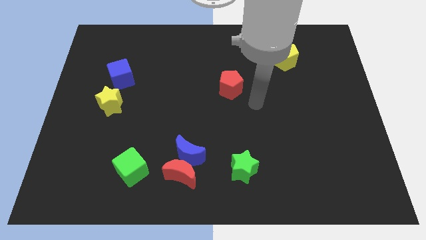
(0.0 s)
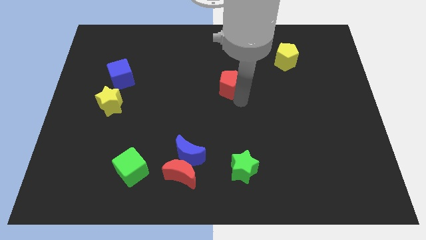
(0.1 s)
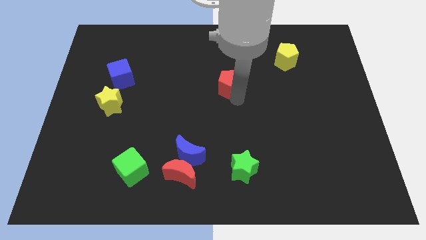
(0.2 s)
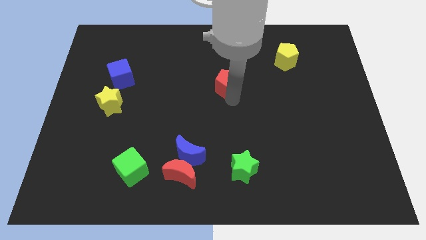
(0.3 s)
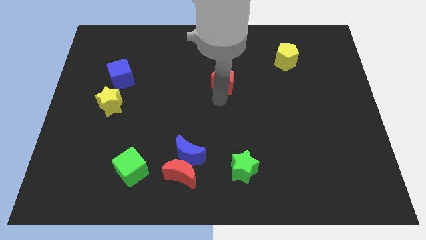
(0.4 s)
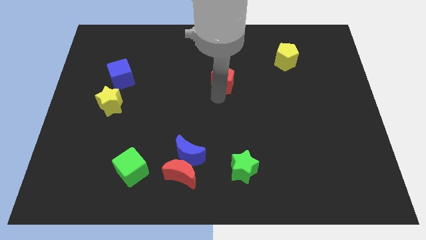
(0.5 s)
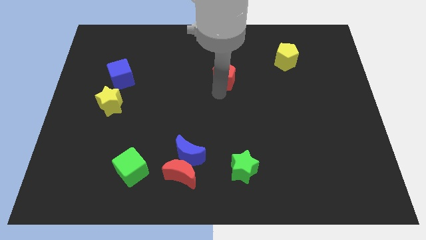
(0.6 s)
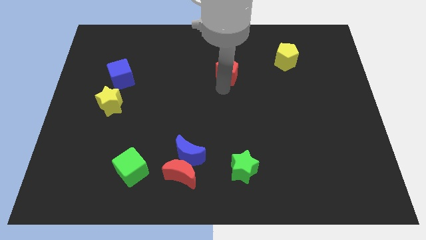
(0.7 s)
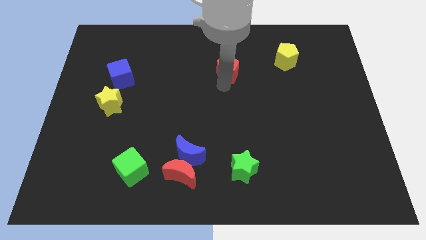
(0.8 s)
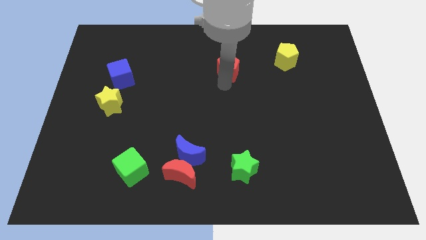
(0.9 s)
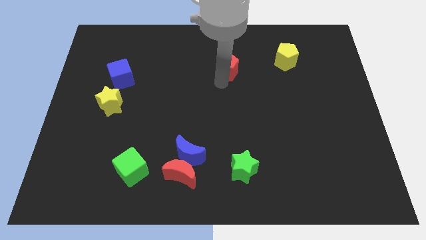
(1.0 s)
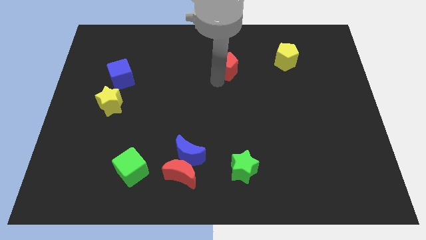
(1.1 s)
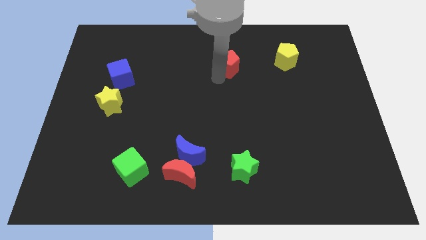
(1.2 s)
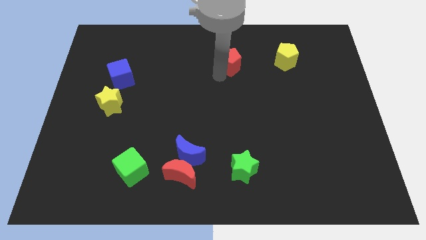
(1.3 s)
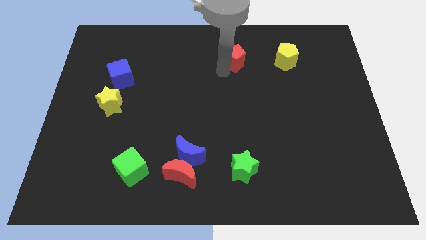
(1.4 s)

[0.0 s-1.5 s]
push red pentagon parallel left to yellow pentagon

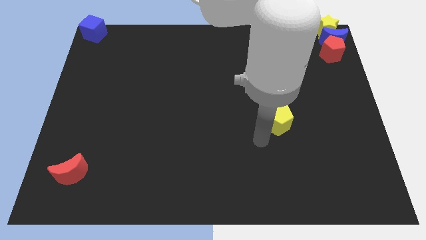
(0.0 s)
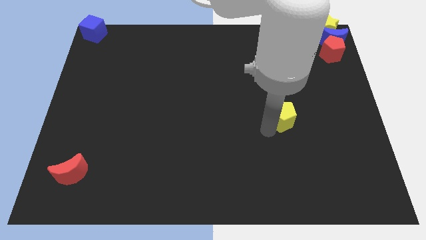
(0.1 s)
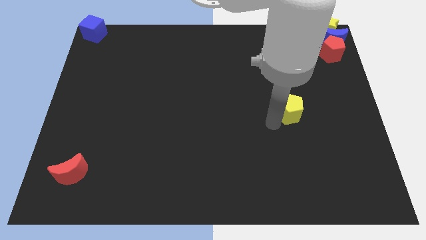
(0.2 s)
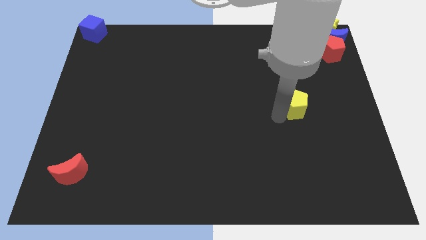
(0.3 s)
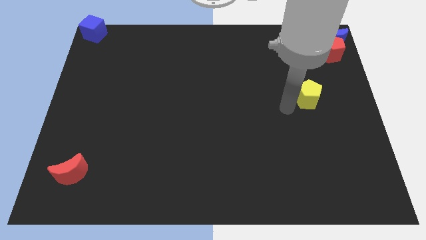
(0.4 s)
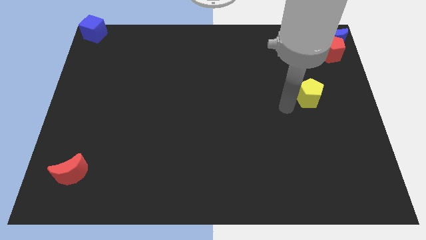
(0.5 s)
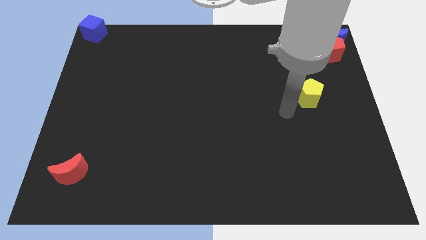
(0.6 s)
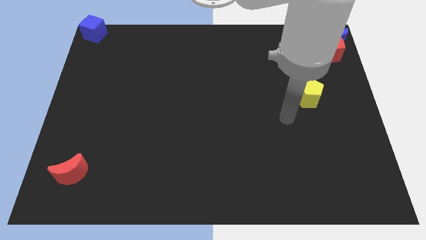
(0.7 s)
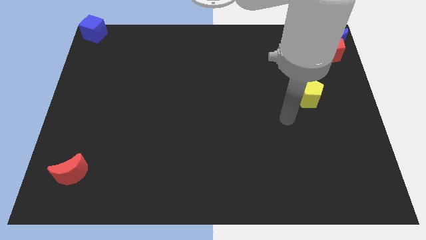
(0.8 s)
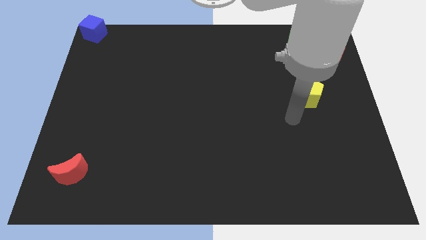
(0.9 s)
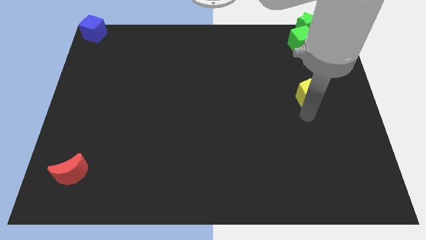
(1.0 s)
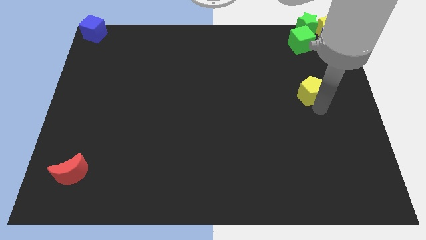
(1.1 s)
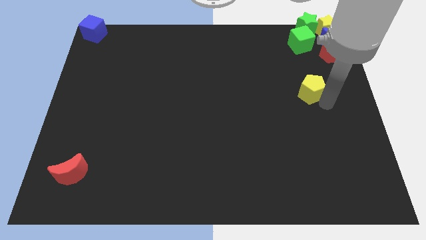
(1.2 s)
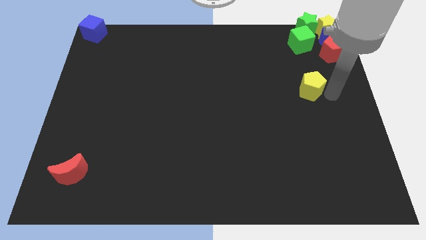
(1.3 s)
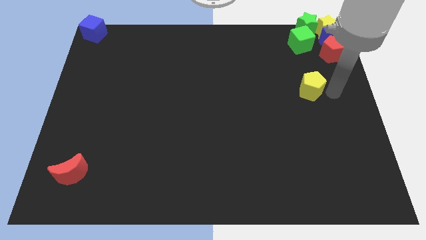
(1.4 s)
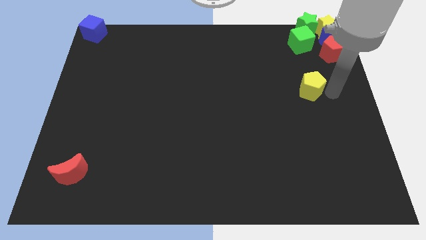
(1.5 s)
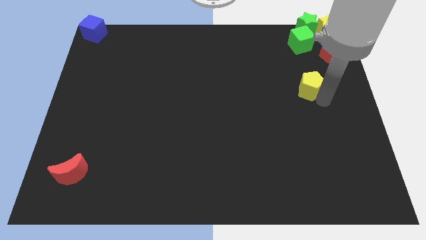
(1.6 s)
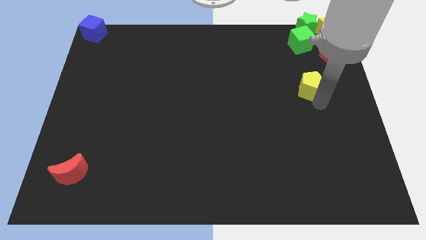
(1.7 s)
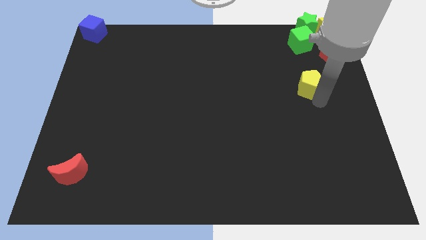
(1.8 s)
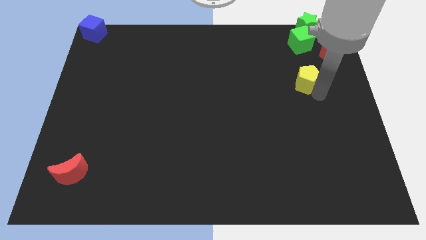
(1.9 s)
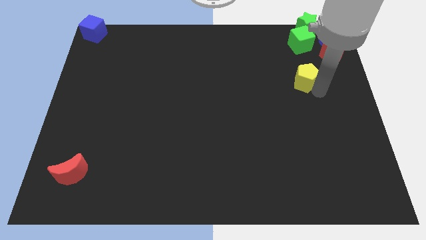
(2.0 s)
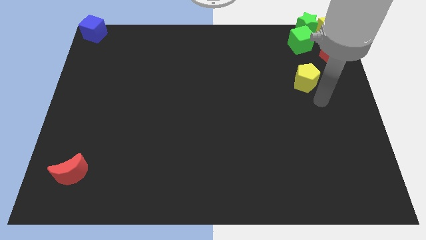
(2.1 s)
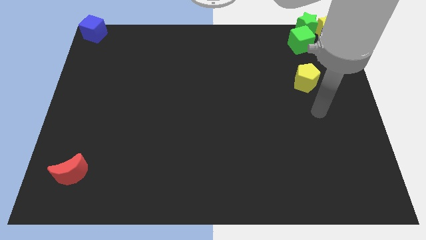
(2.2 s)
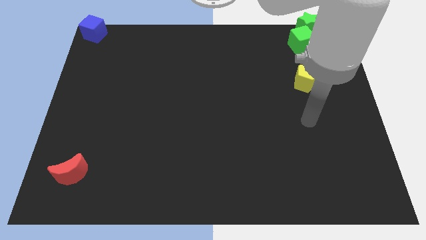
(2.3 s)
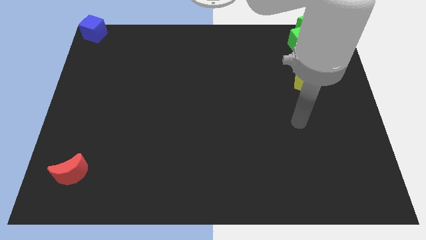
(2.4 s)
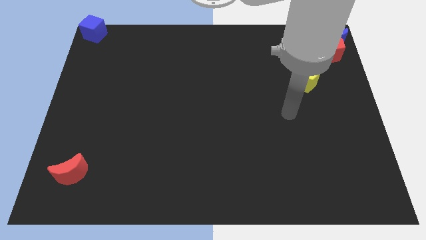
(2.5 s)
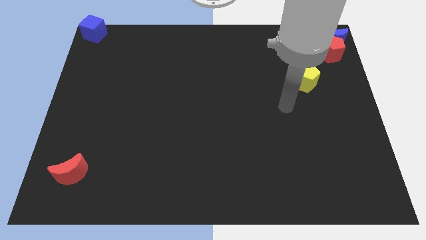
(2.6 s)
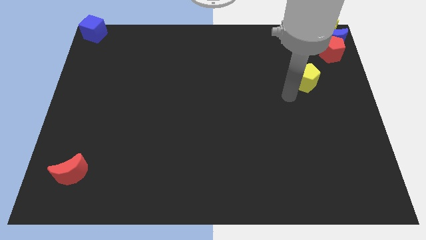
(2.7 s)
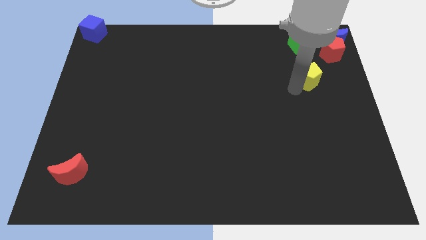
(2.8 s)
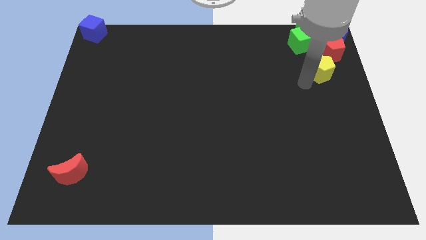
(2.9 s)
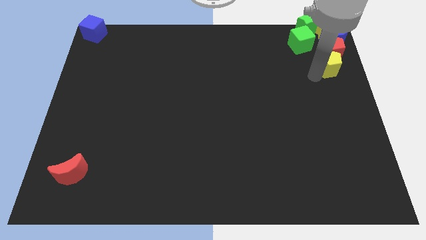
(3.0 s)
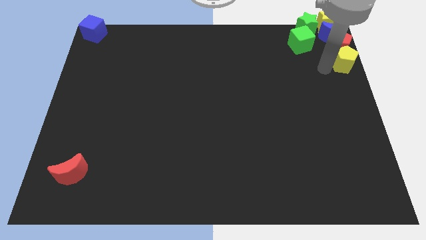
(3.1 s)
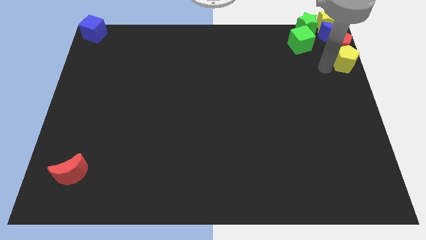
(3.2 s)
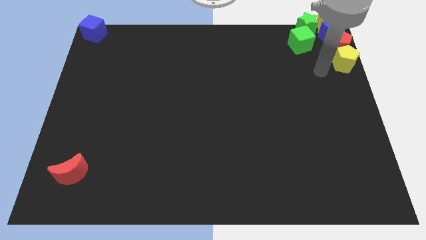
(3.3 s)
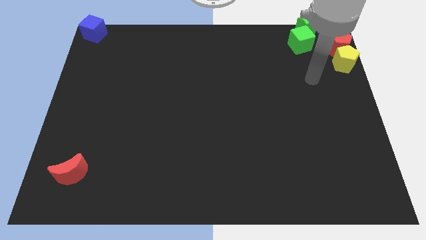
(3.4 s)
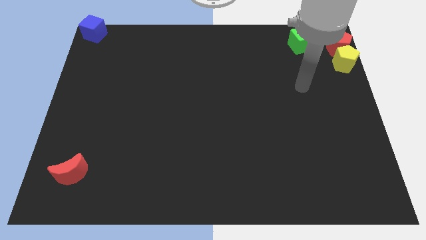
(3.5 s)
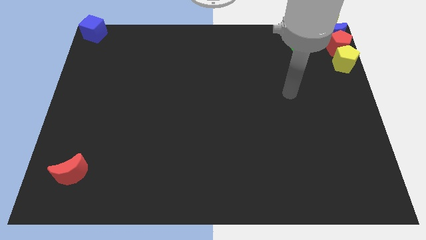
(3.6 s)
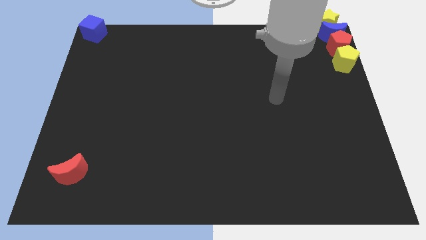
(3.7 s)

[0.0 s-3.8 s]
push the yellow pentagon to the bottom of red pentagon

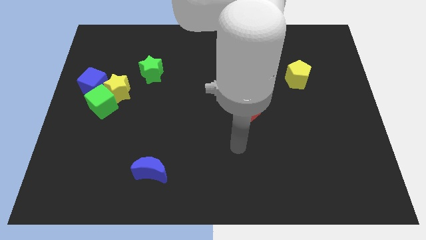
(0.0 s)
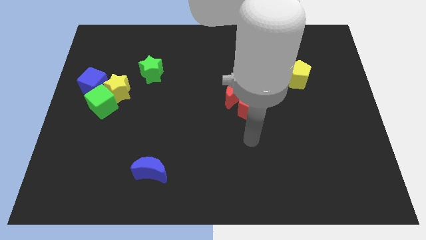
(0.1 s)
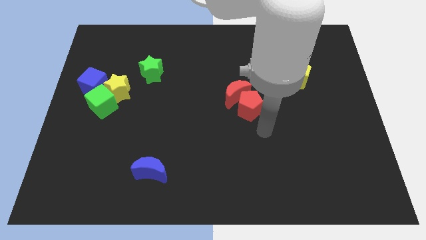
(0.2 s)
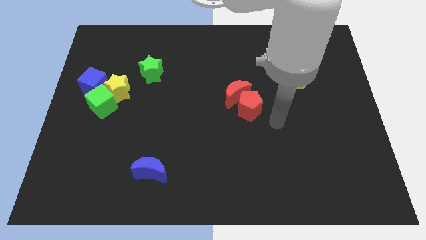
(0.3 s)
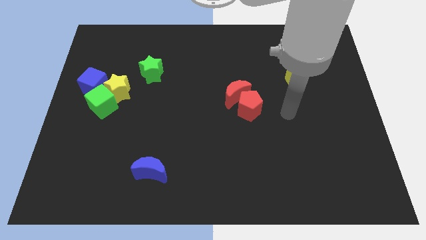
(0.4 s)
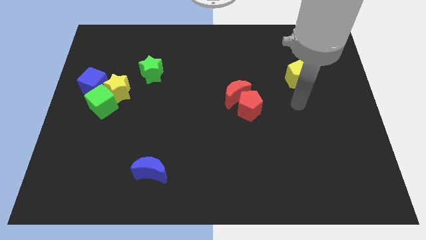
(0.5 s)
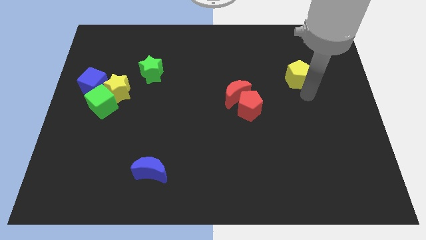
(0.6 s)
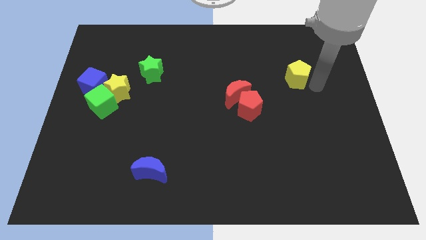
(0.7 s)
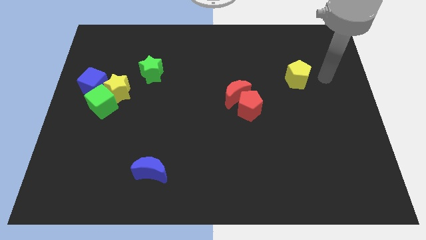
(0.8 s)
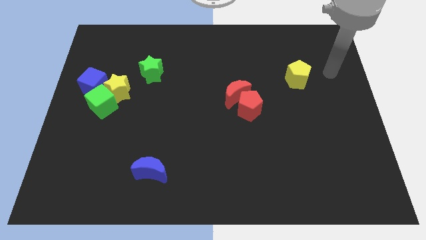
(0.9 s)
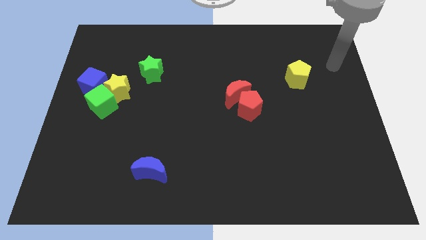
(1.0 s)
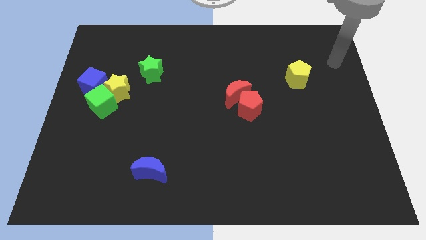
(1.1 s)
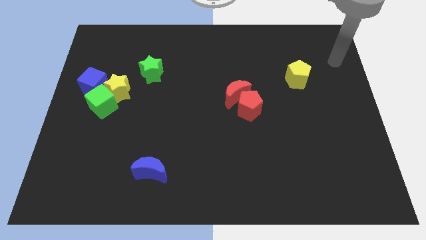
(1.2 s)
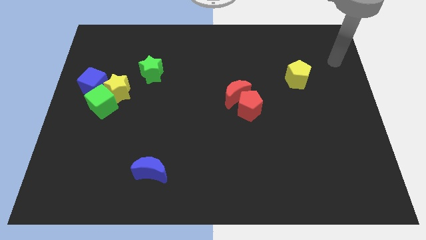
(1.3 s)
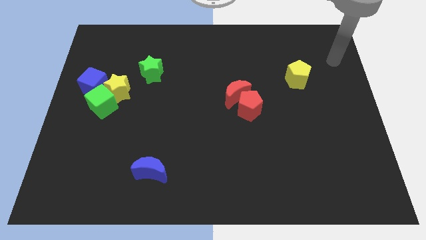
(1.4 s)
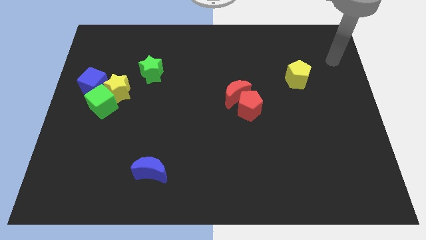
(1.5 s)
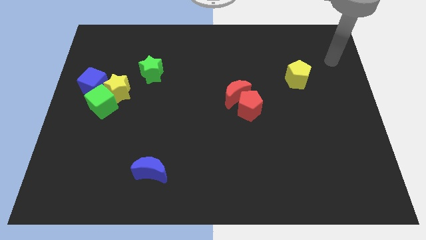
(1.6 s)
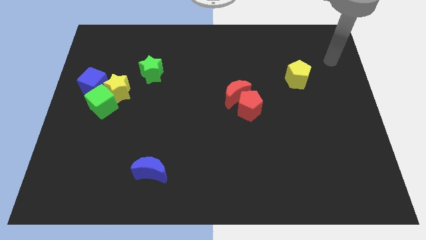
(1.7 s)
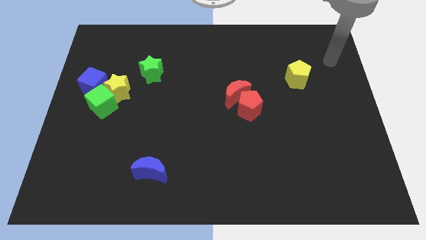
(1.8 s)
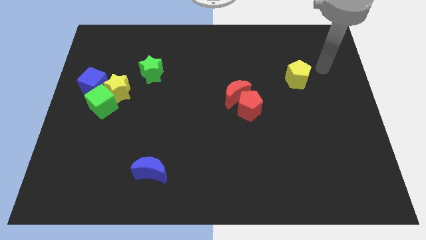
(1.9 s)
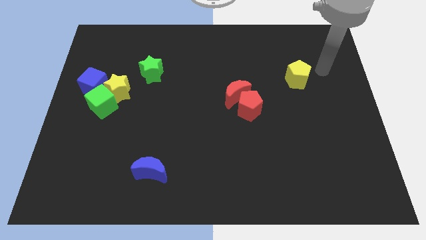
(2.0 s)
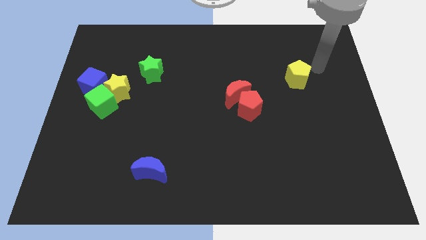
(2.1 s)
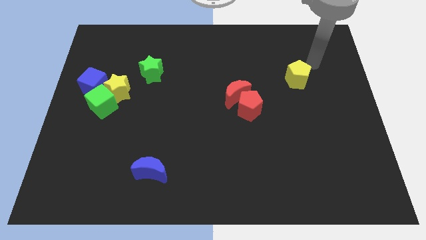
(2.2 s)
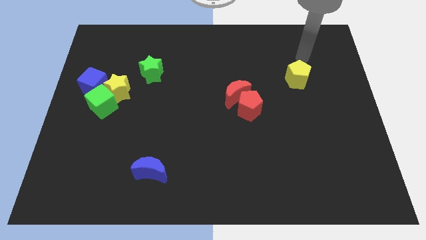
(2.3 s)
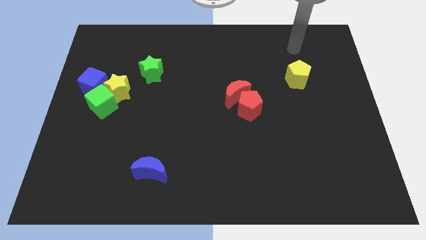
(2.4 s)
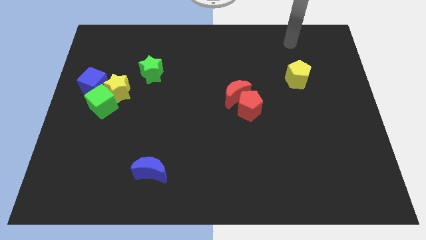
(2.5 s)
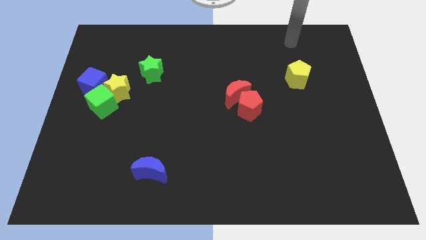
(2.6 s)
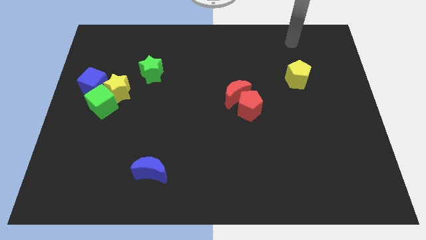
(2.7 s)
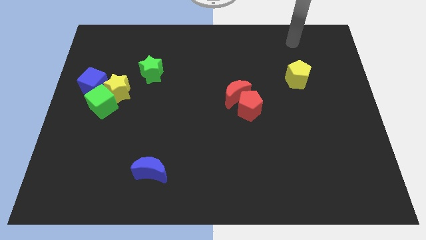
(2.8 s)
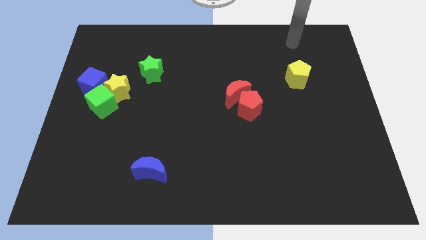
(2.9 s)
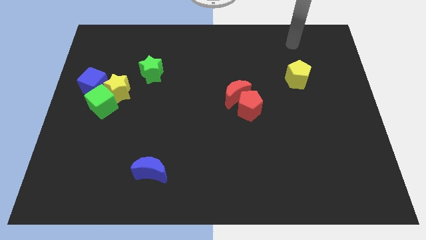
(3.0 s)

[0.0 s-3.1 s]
place your arm on top of yellow pentagon

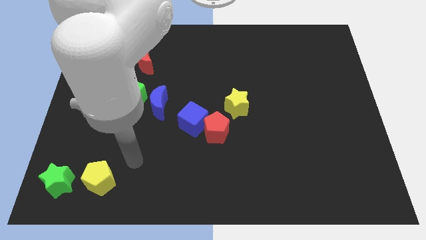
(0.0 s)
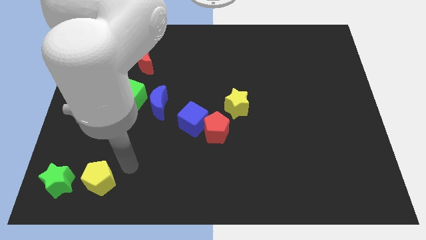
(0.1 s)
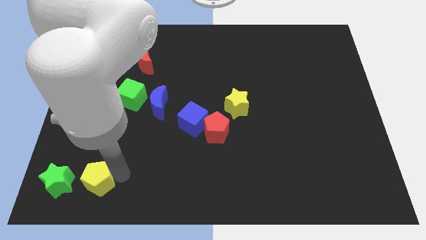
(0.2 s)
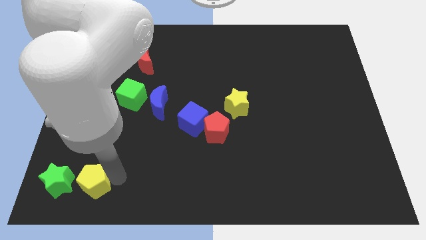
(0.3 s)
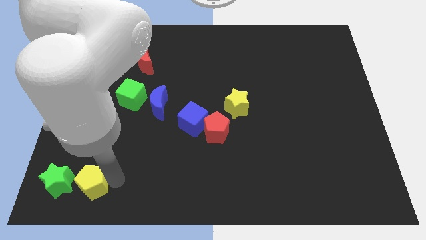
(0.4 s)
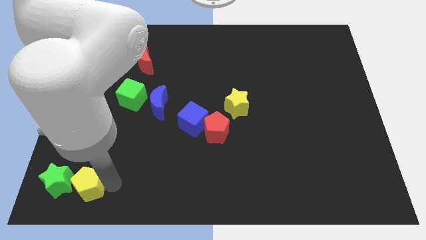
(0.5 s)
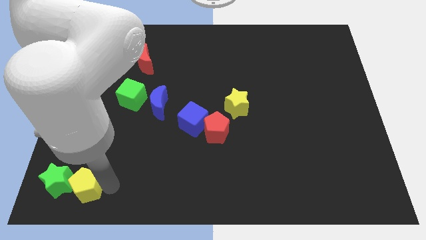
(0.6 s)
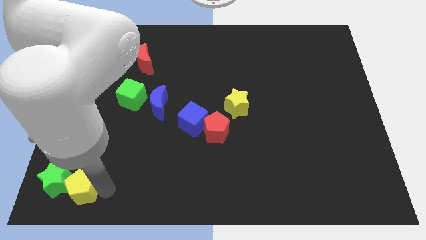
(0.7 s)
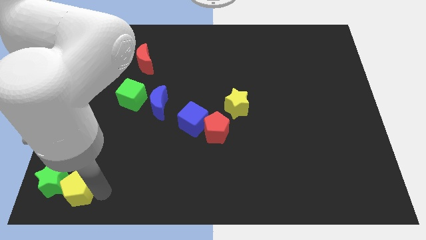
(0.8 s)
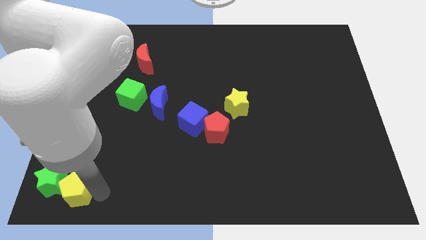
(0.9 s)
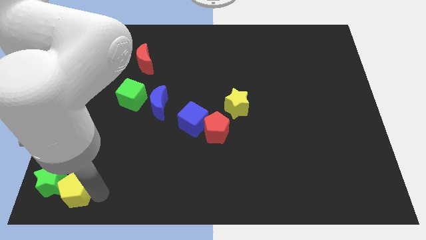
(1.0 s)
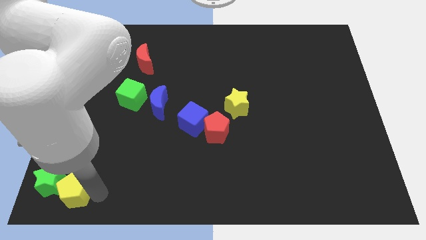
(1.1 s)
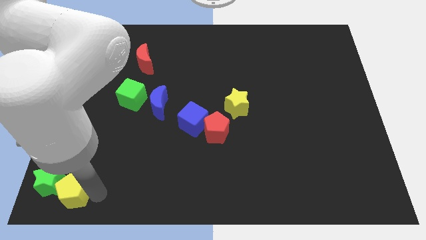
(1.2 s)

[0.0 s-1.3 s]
push the yellow pentagon into the green star
